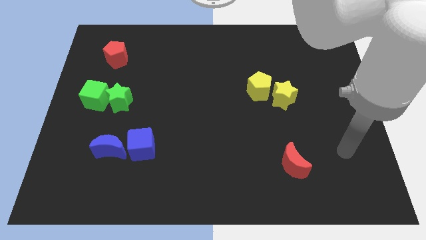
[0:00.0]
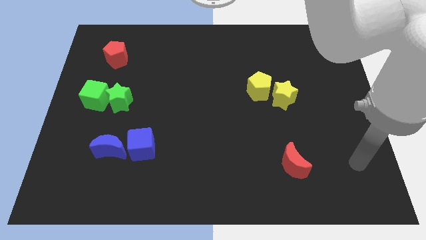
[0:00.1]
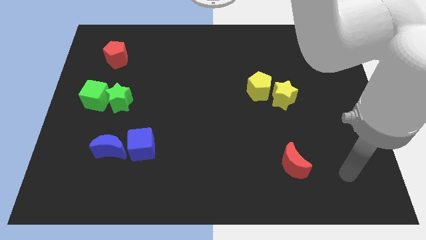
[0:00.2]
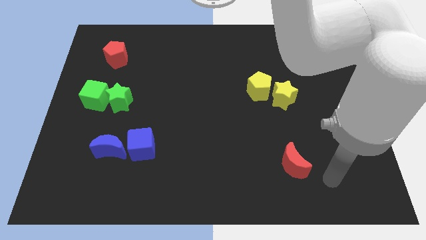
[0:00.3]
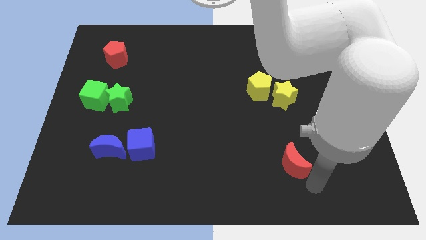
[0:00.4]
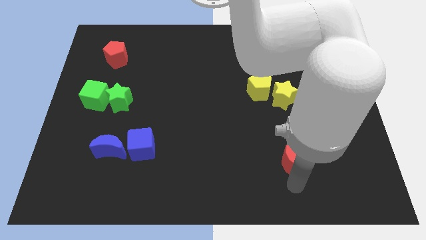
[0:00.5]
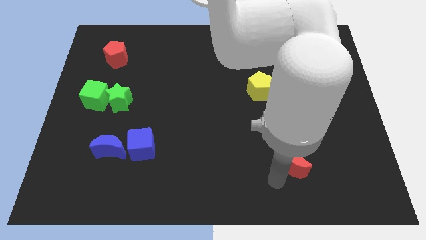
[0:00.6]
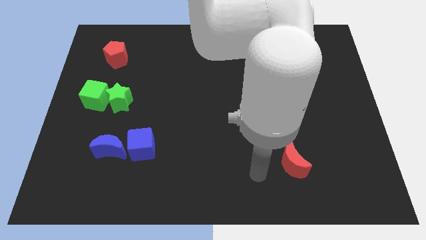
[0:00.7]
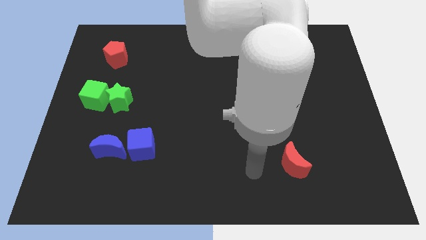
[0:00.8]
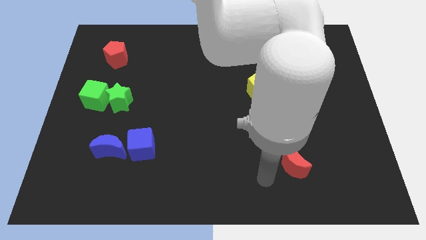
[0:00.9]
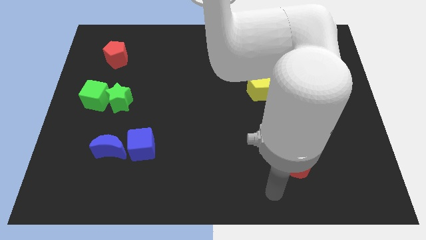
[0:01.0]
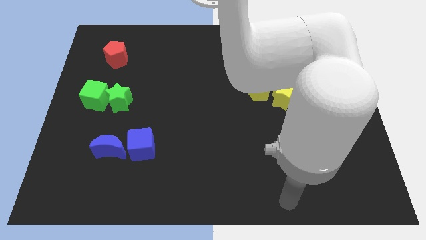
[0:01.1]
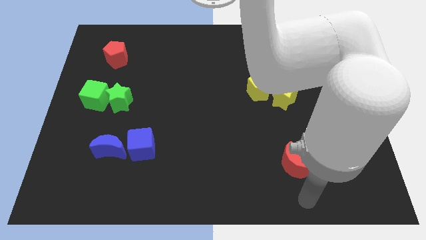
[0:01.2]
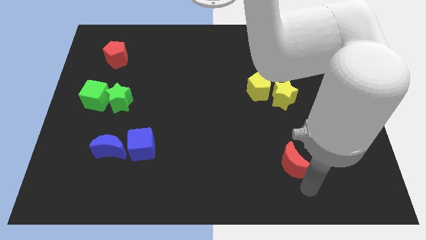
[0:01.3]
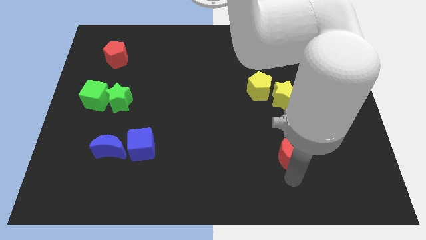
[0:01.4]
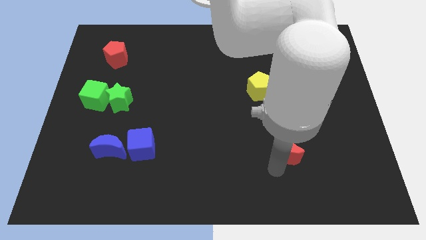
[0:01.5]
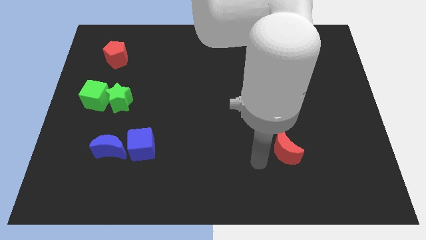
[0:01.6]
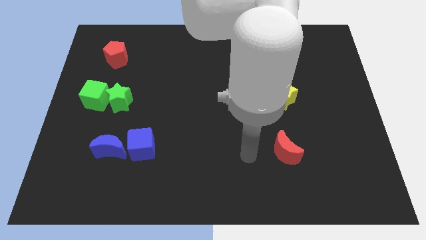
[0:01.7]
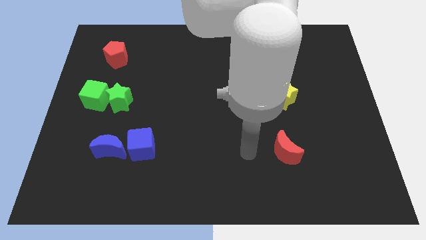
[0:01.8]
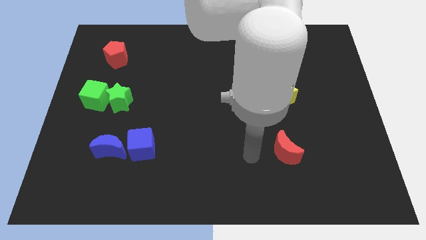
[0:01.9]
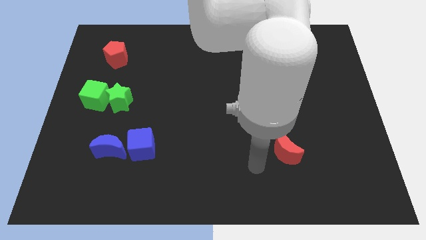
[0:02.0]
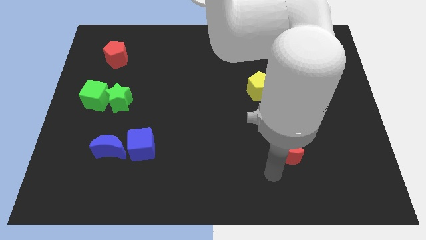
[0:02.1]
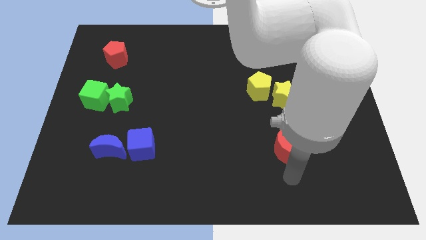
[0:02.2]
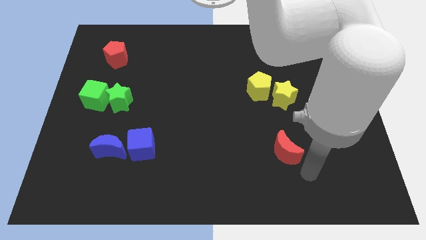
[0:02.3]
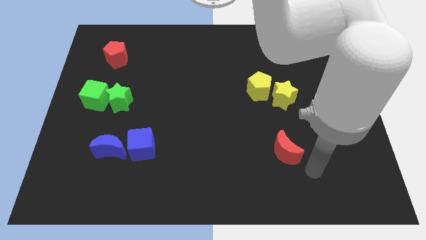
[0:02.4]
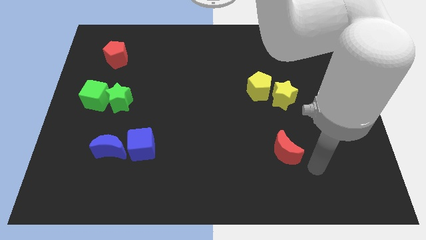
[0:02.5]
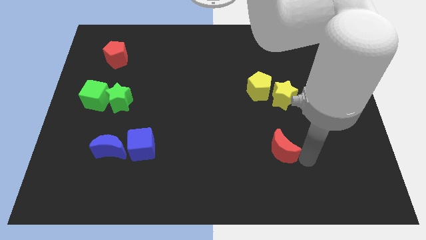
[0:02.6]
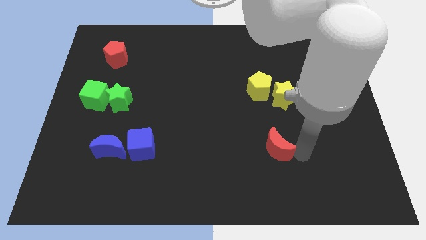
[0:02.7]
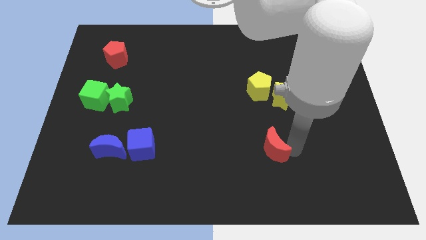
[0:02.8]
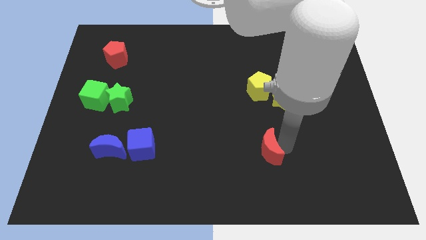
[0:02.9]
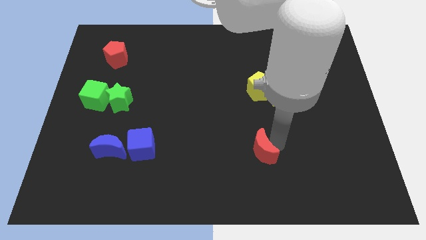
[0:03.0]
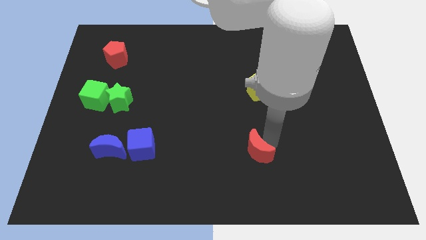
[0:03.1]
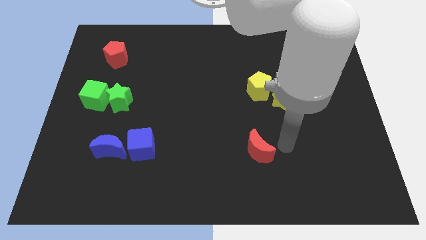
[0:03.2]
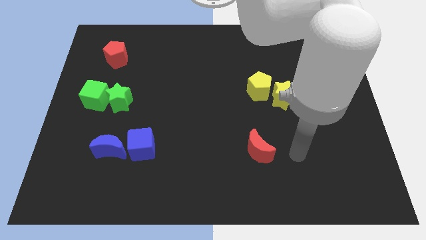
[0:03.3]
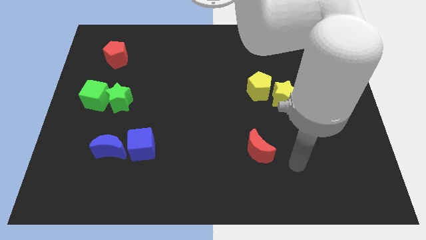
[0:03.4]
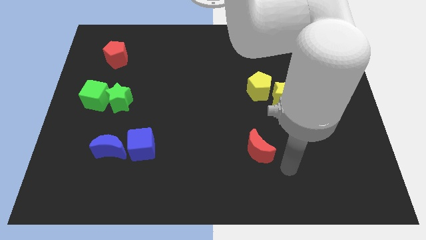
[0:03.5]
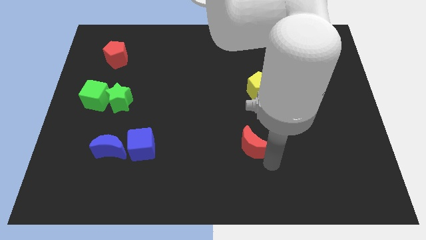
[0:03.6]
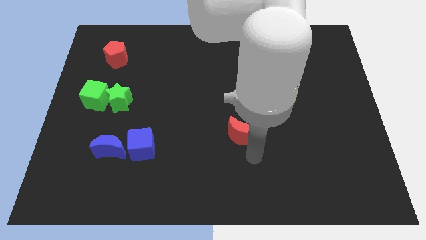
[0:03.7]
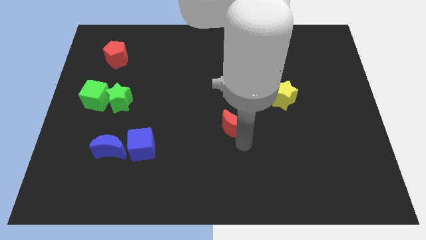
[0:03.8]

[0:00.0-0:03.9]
place the red moon below the yellow pentagon

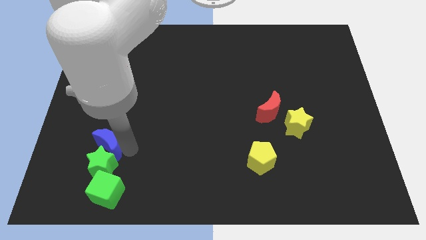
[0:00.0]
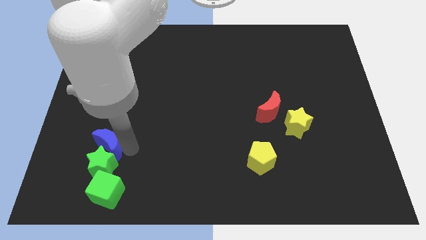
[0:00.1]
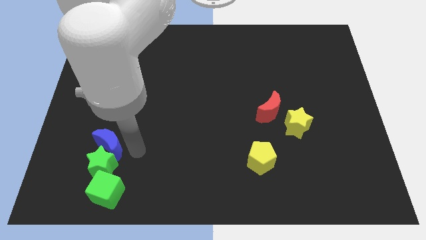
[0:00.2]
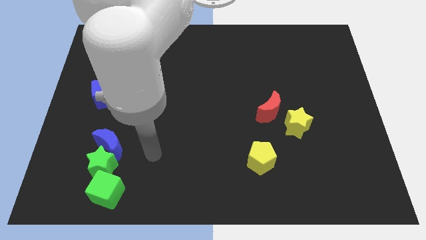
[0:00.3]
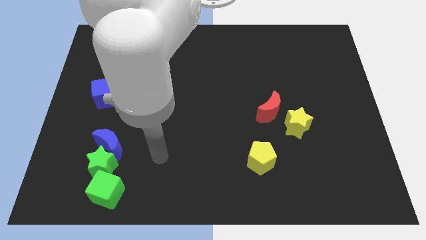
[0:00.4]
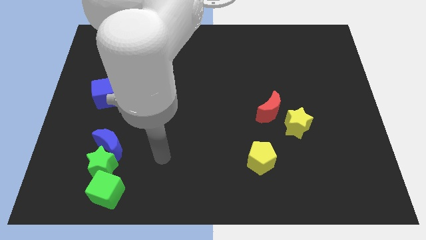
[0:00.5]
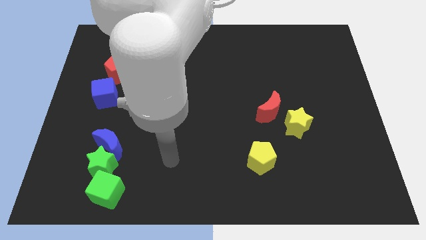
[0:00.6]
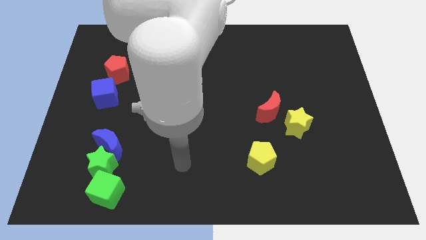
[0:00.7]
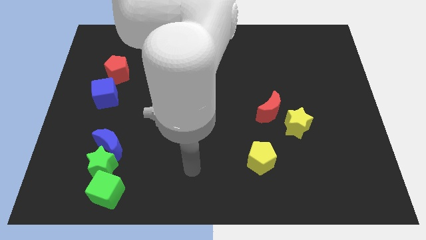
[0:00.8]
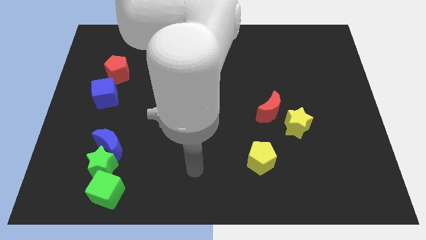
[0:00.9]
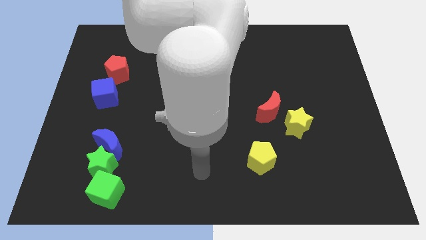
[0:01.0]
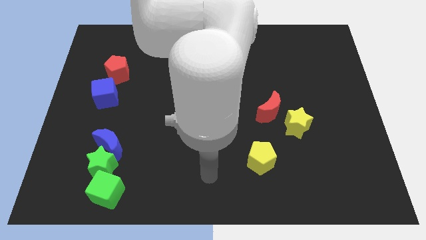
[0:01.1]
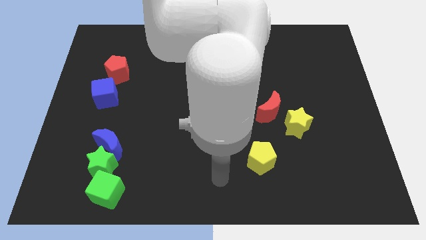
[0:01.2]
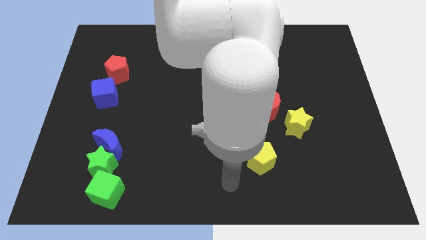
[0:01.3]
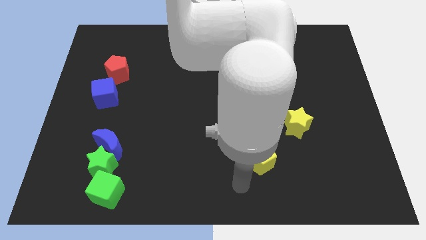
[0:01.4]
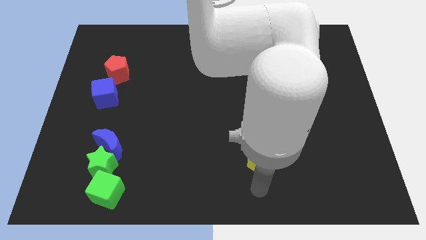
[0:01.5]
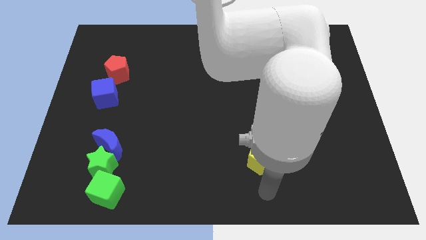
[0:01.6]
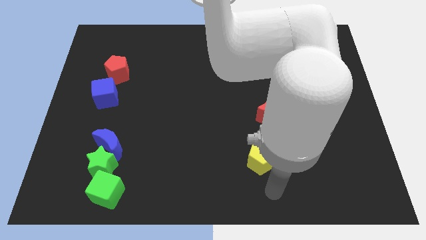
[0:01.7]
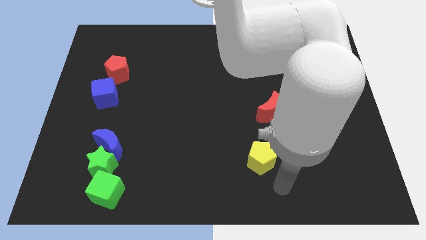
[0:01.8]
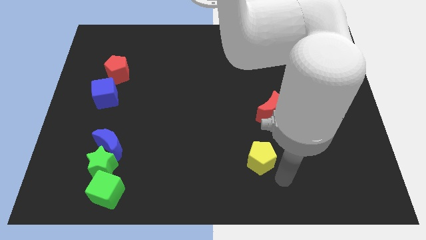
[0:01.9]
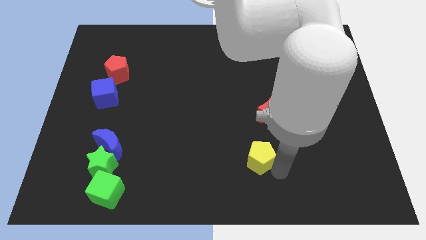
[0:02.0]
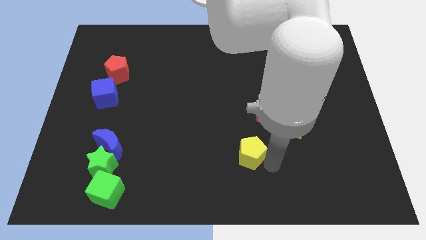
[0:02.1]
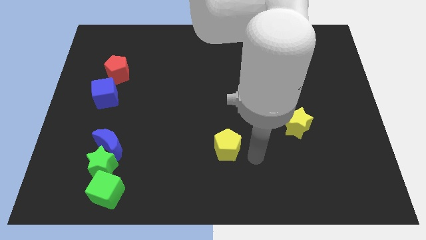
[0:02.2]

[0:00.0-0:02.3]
move your arm away from the blue moon to the right side of the yellow pentagon

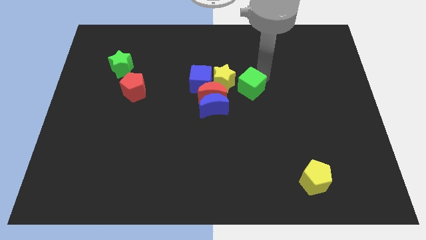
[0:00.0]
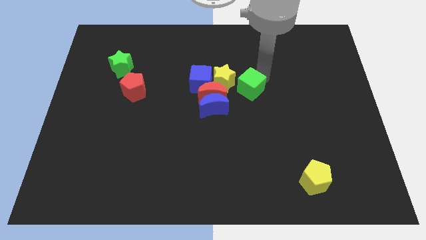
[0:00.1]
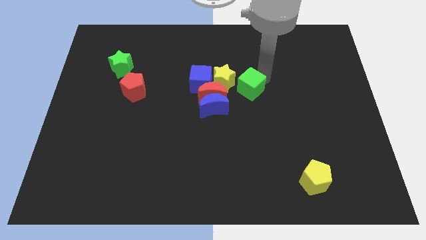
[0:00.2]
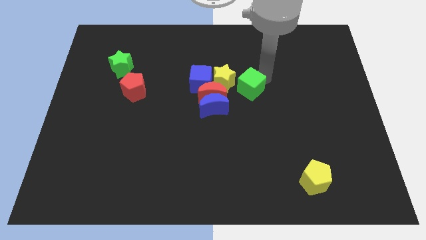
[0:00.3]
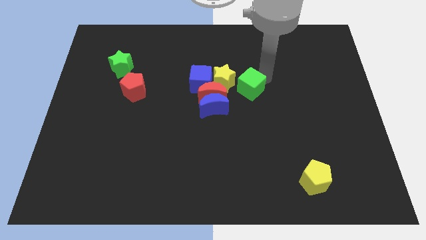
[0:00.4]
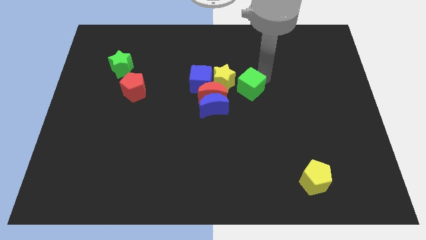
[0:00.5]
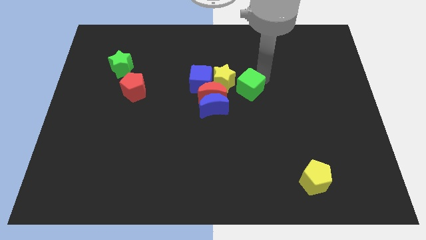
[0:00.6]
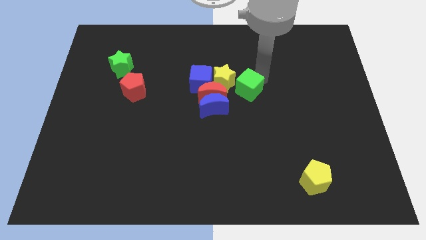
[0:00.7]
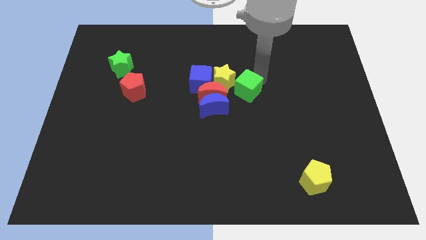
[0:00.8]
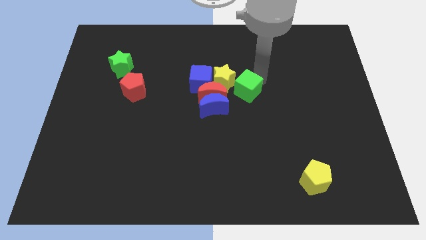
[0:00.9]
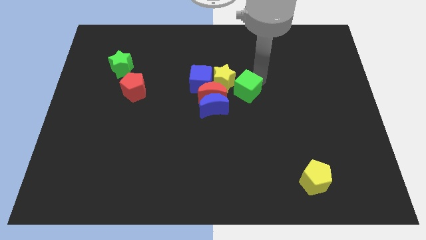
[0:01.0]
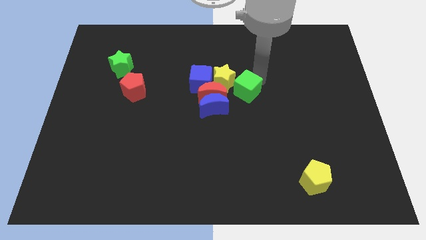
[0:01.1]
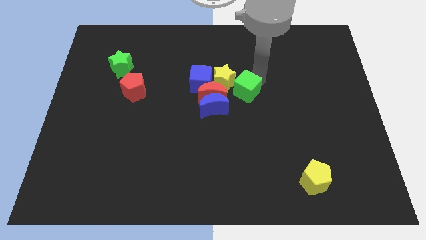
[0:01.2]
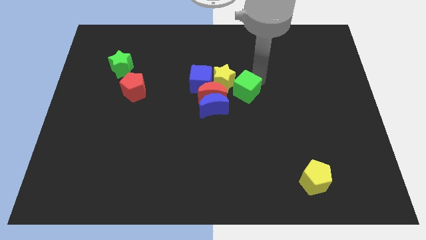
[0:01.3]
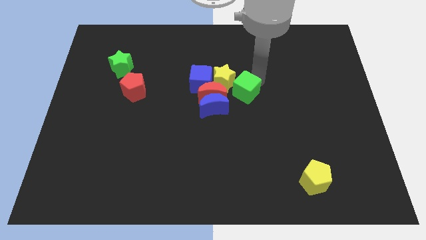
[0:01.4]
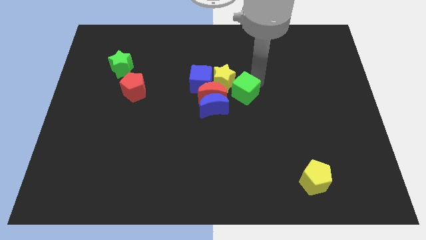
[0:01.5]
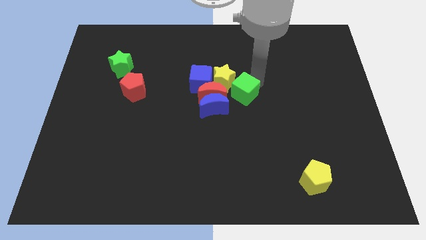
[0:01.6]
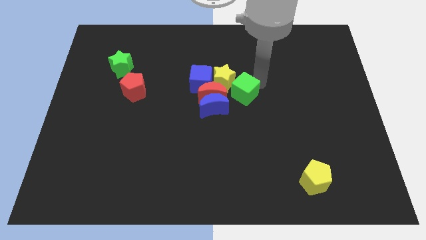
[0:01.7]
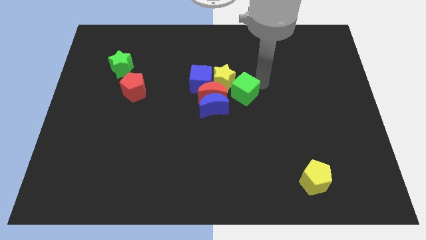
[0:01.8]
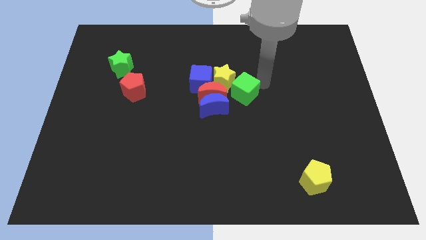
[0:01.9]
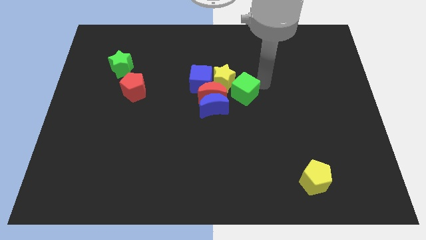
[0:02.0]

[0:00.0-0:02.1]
move green cube slightly down

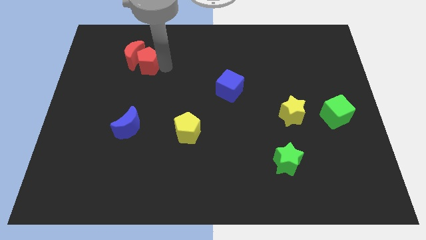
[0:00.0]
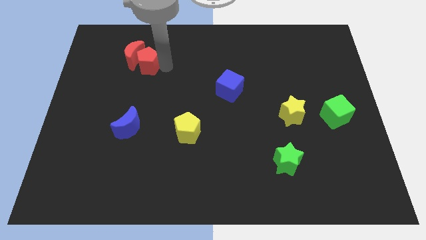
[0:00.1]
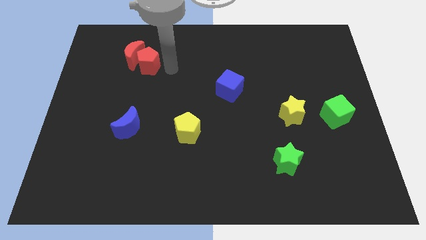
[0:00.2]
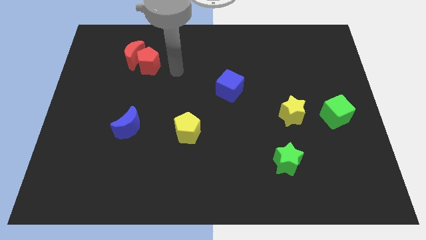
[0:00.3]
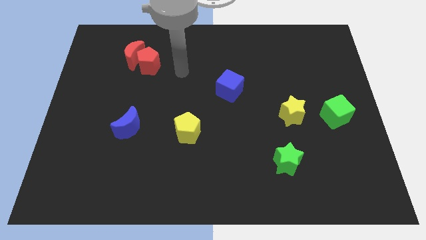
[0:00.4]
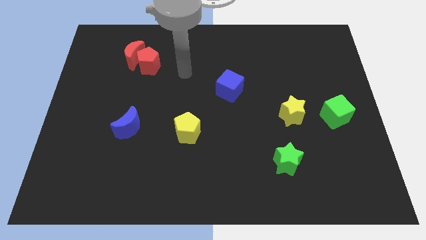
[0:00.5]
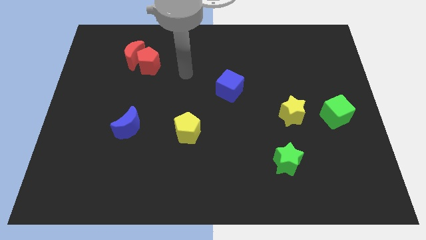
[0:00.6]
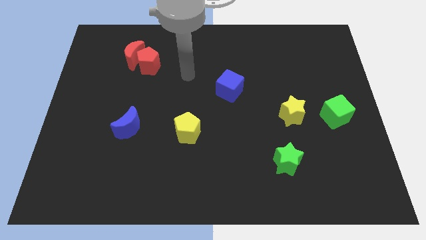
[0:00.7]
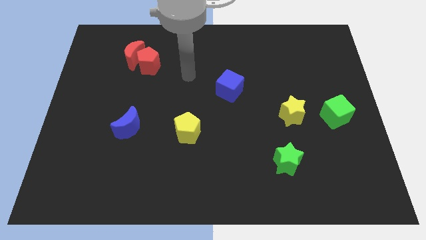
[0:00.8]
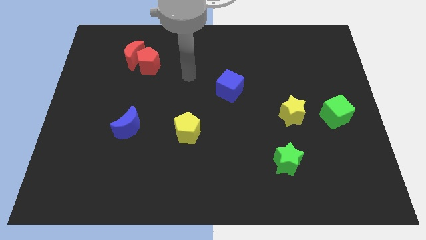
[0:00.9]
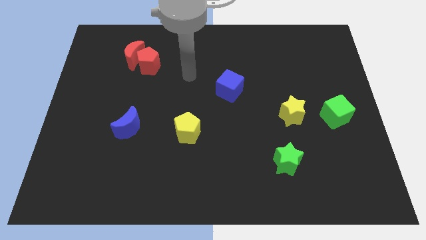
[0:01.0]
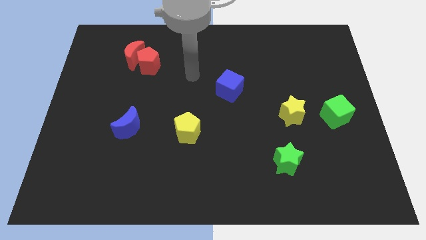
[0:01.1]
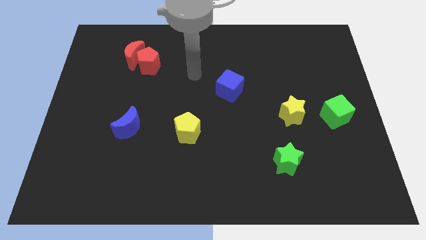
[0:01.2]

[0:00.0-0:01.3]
move the arm away from the red pentagon
